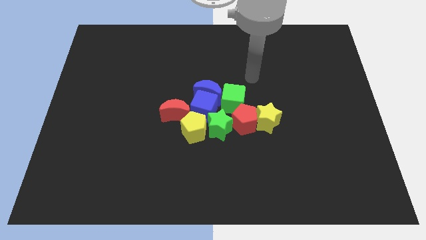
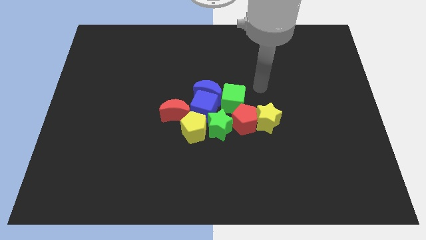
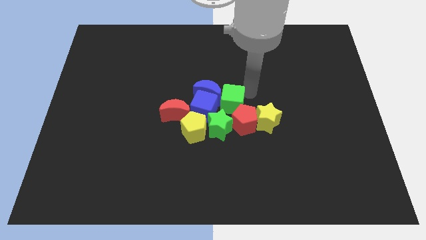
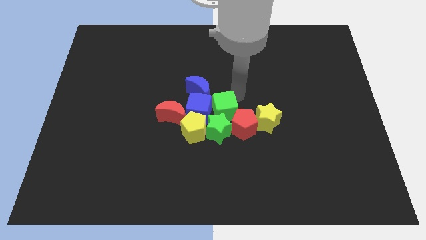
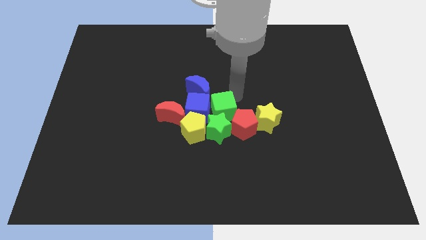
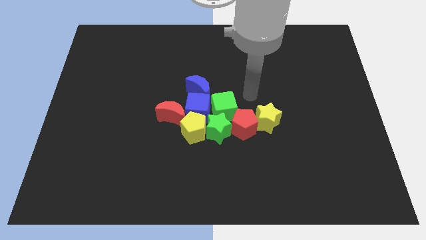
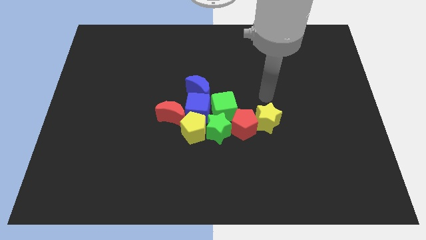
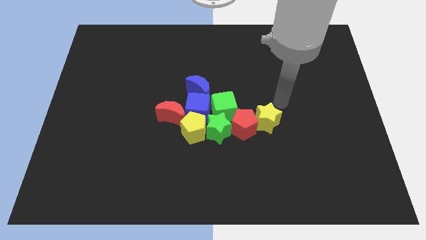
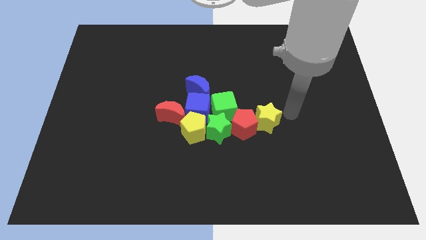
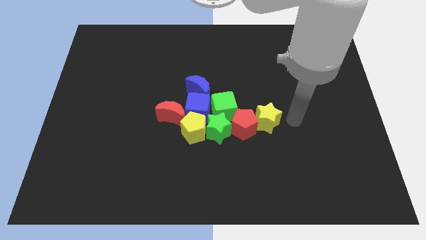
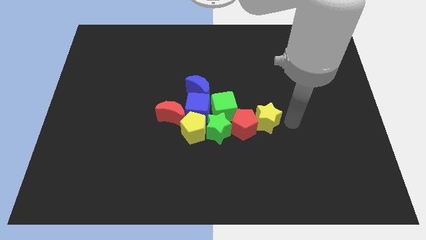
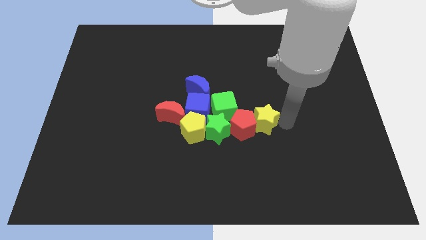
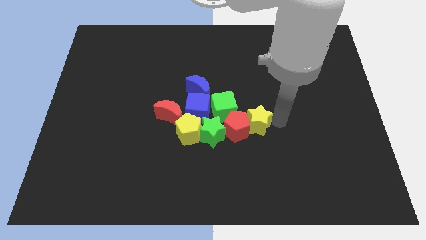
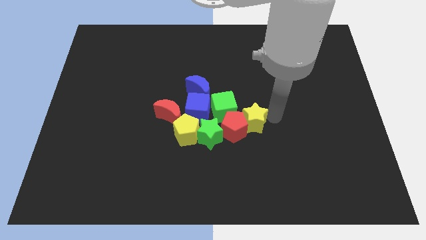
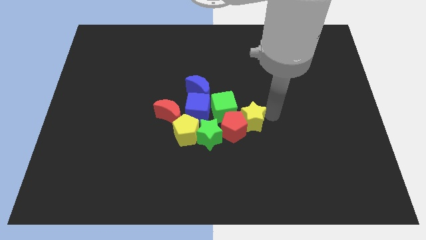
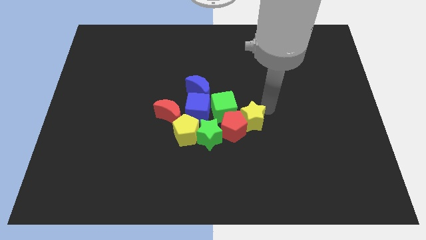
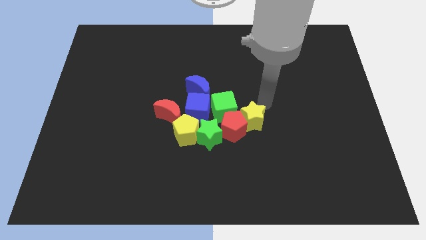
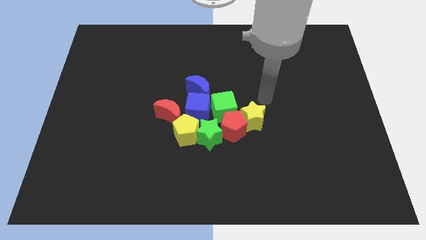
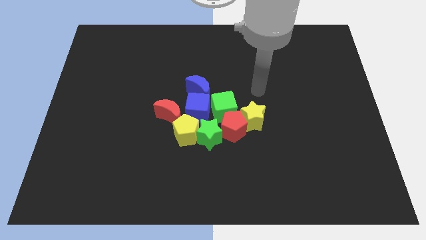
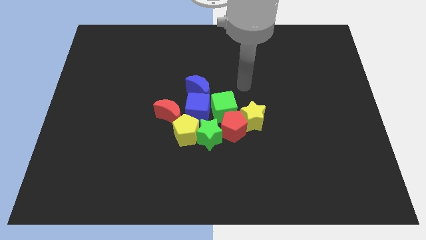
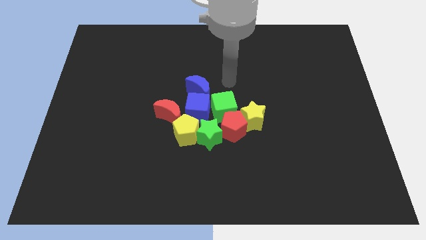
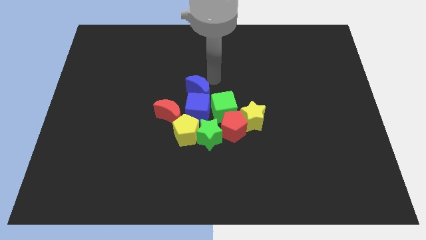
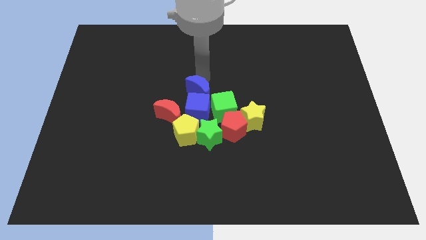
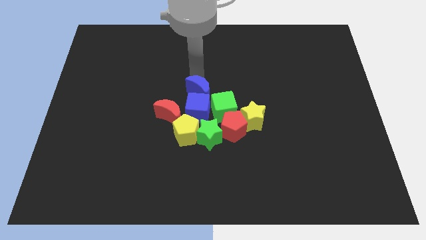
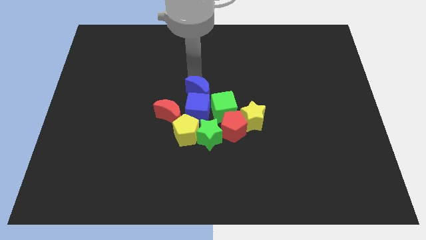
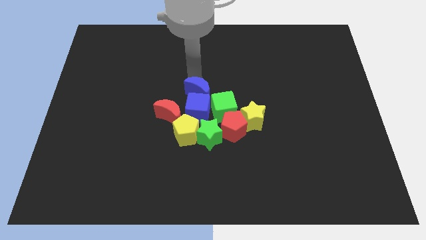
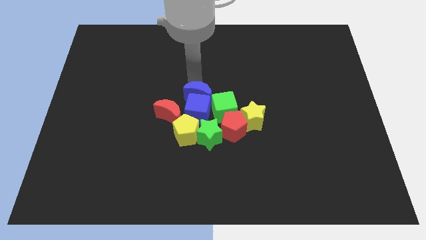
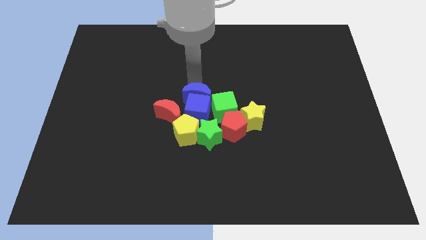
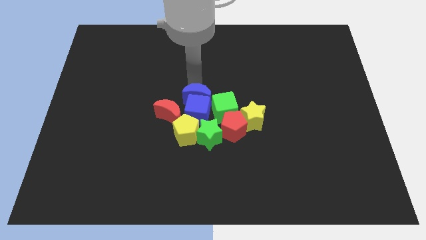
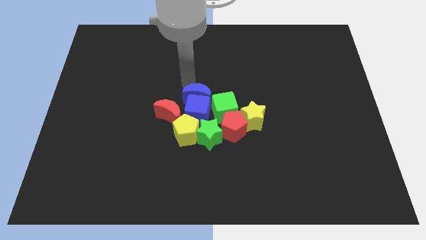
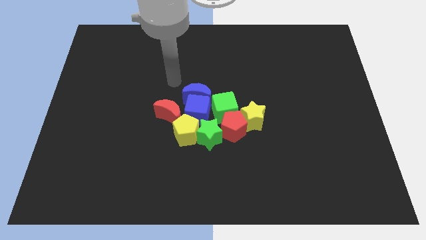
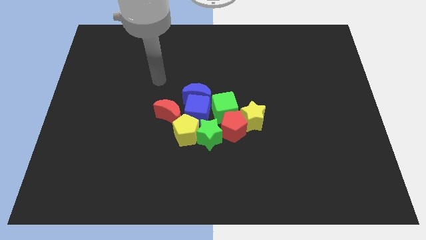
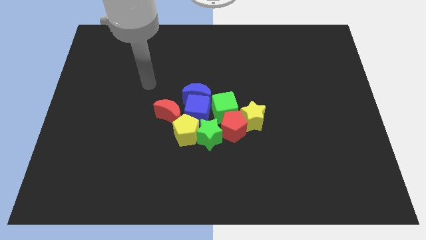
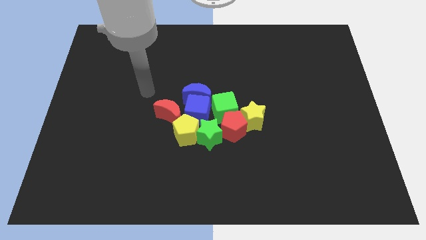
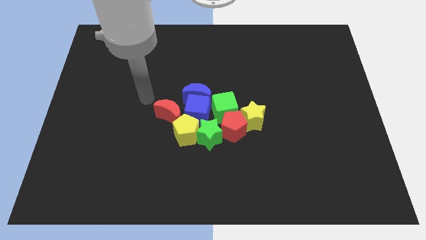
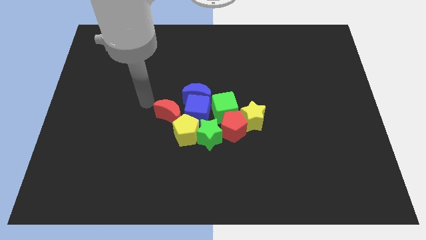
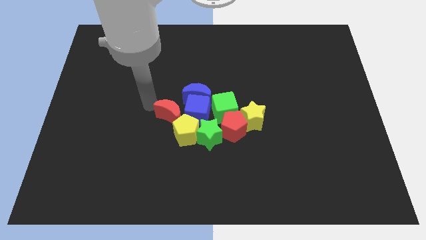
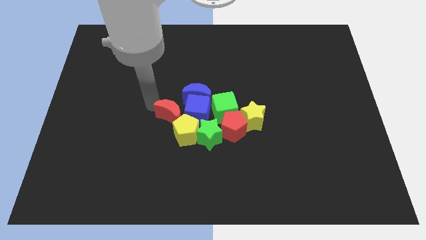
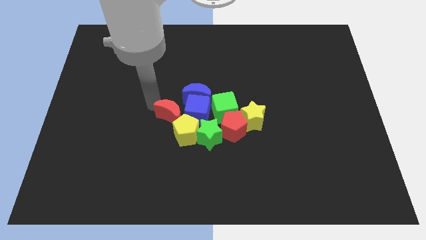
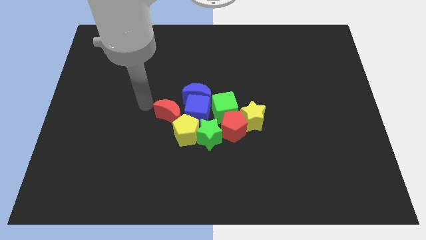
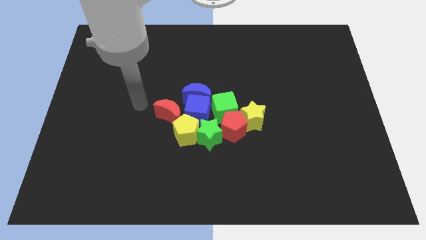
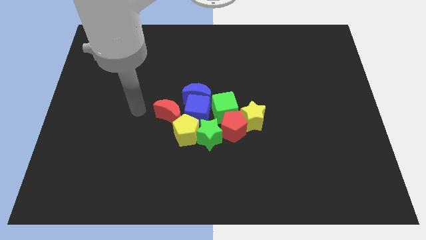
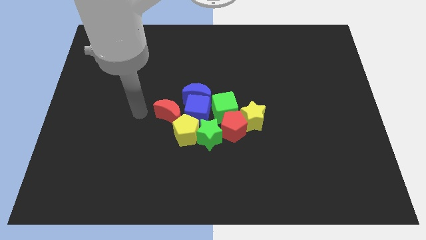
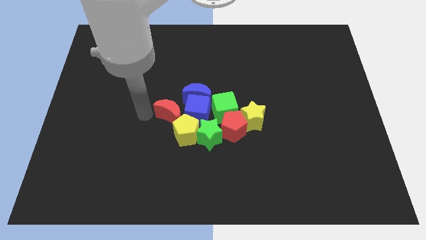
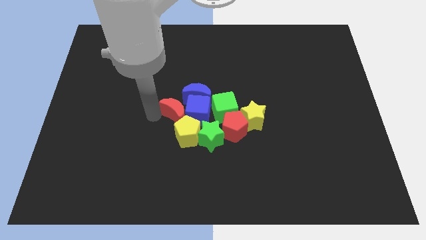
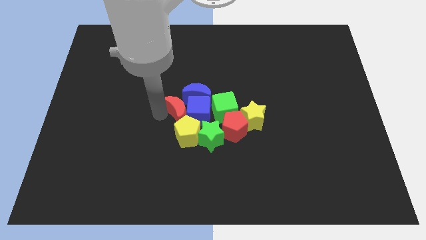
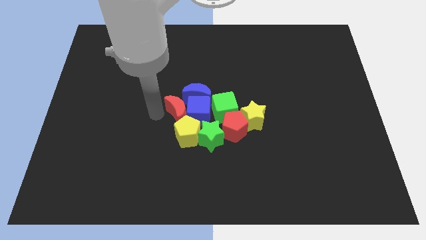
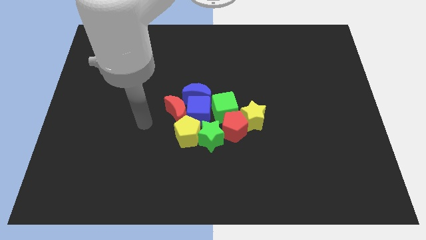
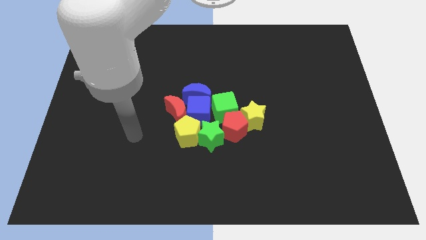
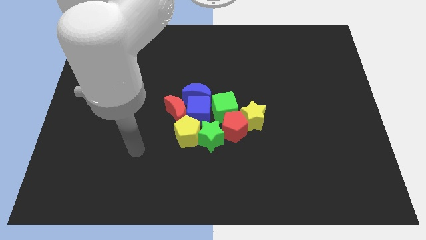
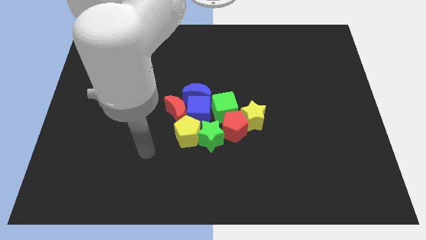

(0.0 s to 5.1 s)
adjust the group objects at the center of the table

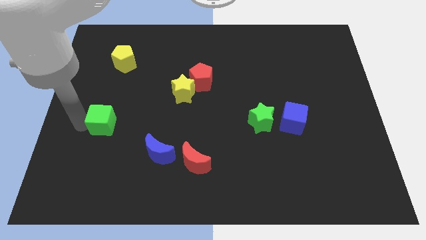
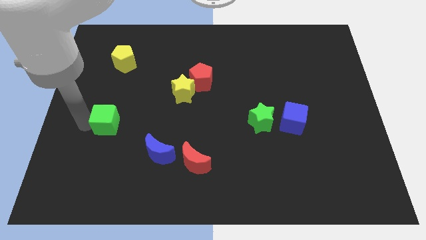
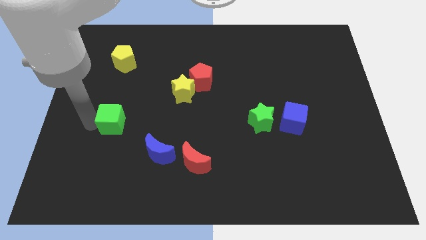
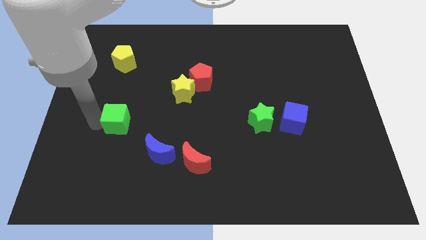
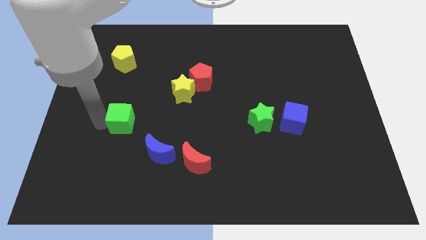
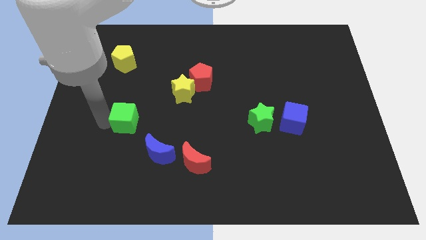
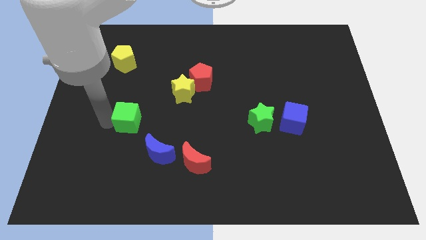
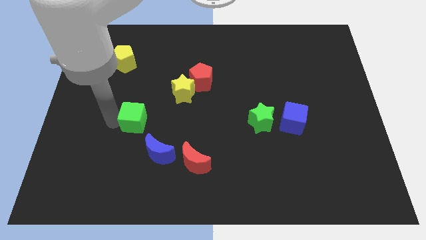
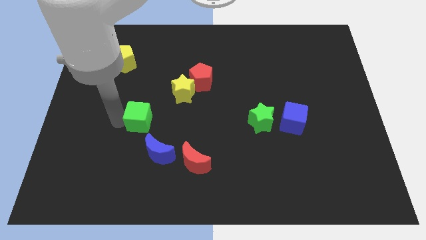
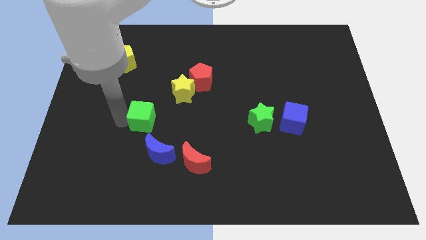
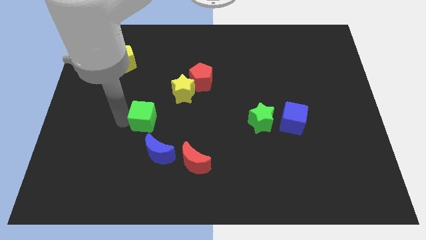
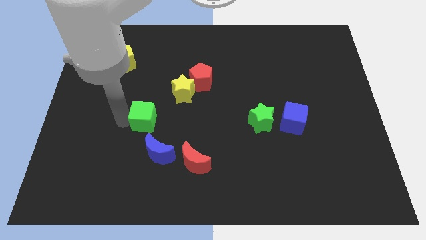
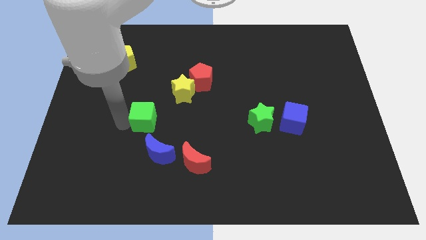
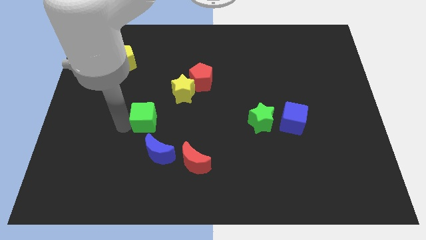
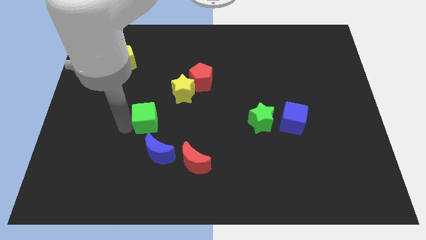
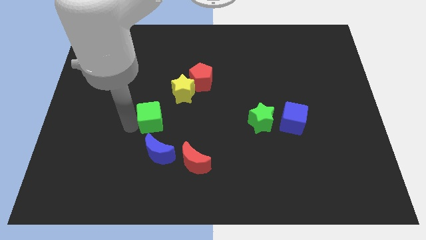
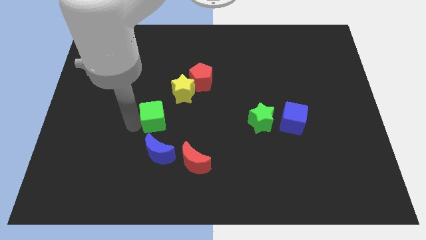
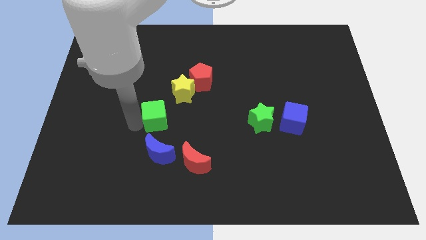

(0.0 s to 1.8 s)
push green cube above blue crescent

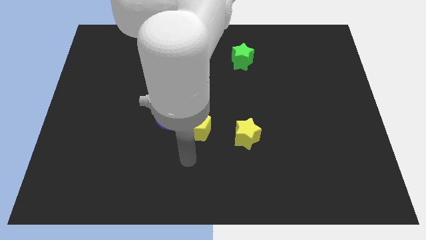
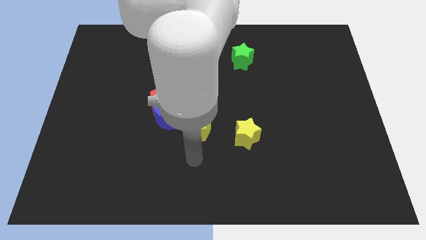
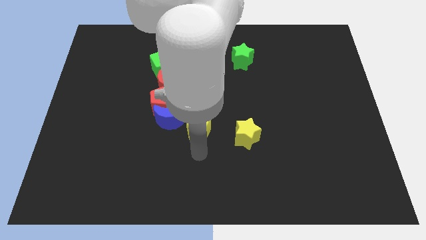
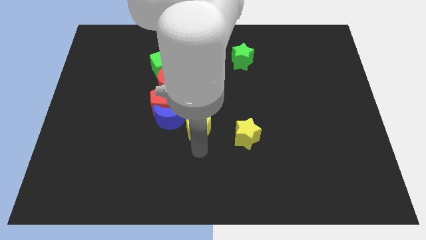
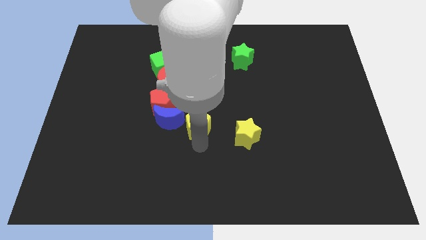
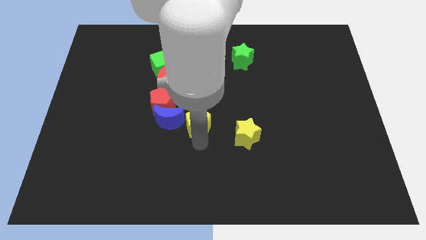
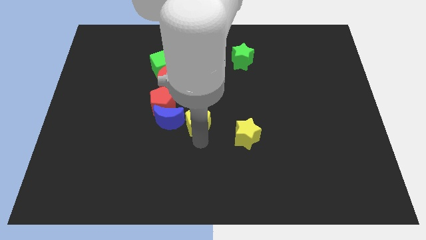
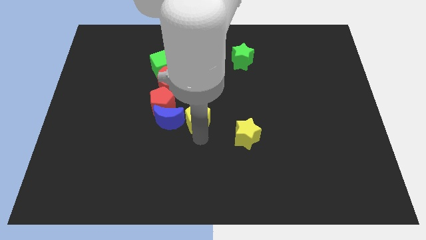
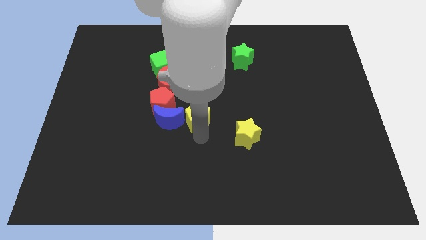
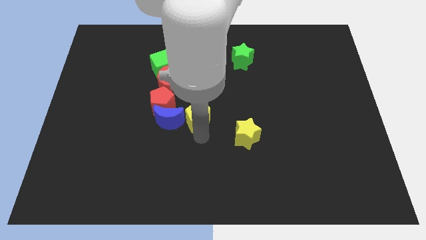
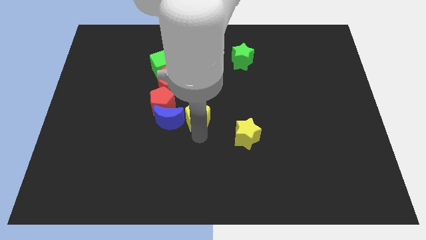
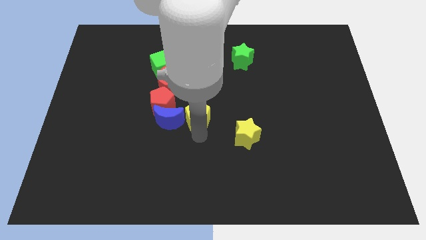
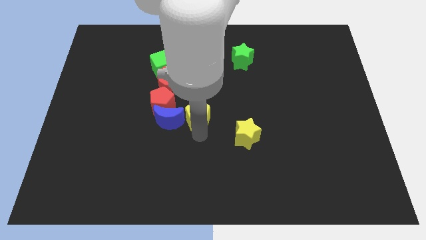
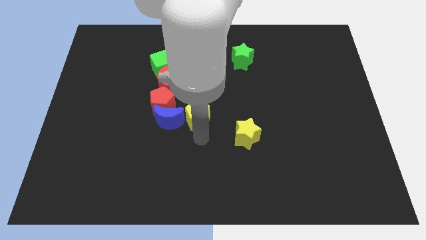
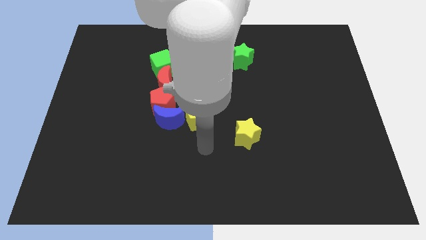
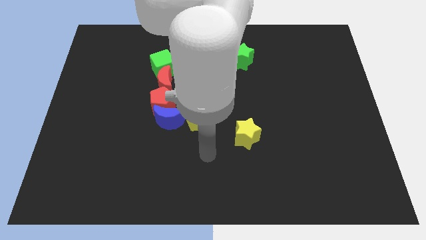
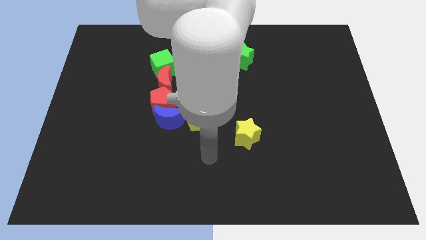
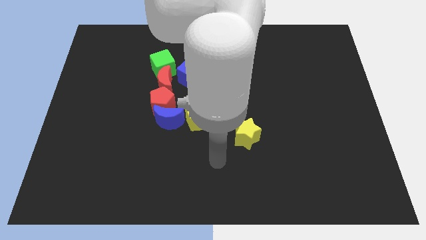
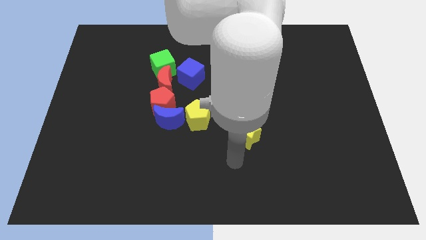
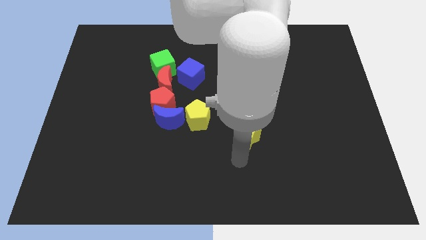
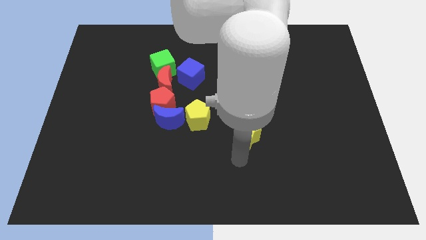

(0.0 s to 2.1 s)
place the yellow pentagon to the right of the blue moon
